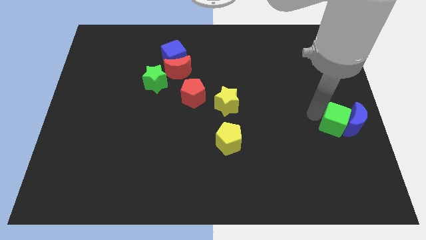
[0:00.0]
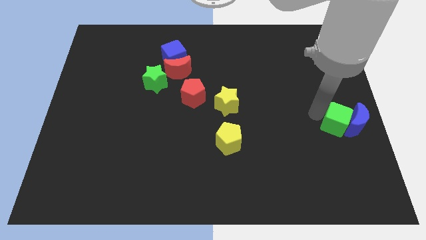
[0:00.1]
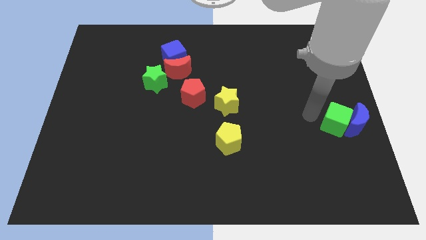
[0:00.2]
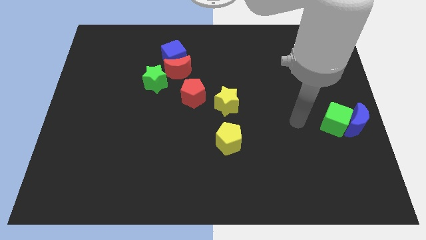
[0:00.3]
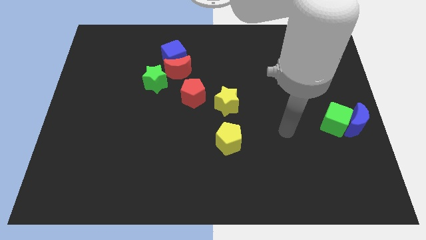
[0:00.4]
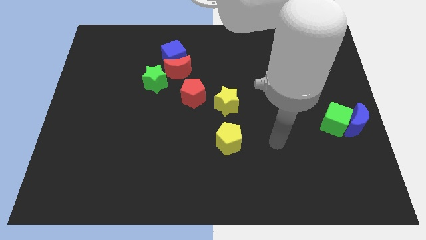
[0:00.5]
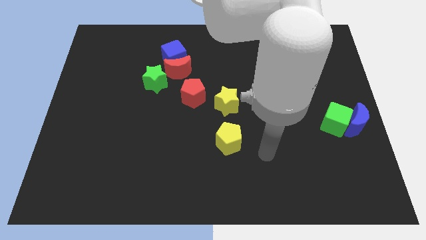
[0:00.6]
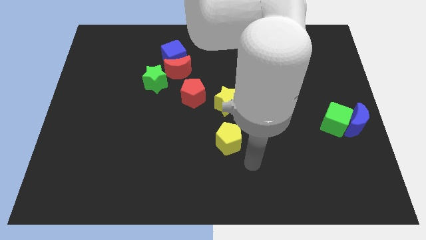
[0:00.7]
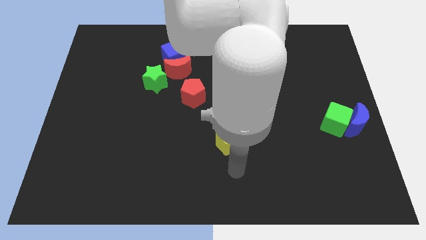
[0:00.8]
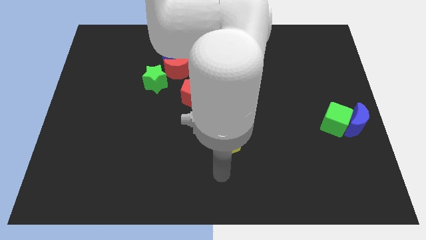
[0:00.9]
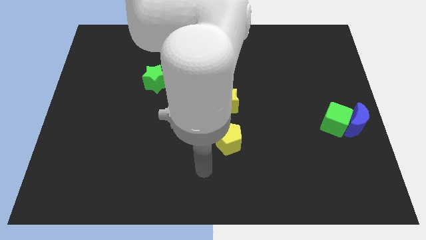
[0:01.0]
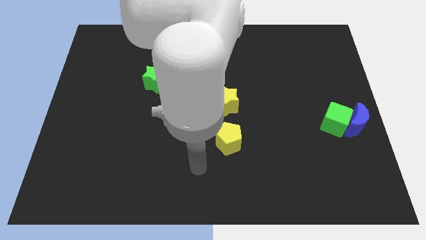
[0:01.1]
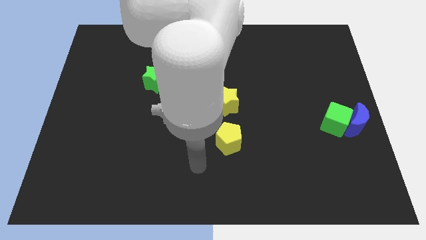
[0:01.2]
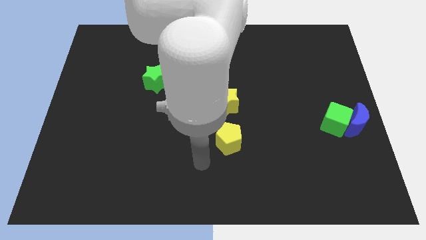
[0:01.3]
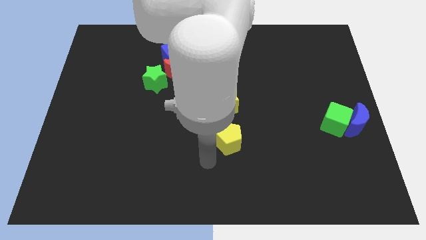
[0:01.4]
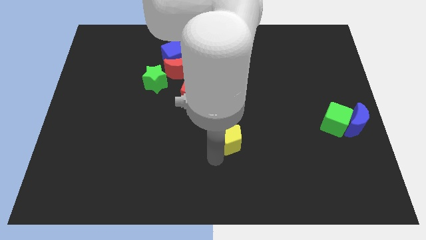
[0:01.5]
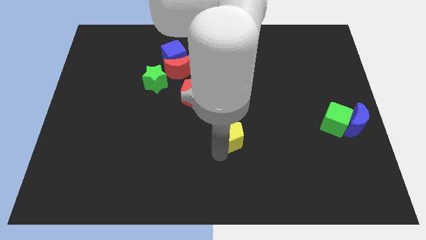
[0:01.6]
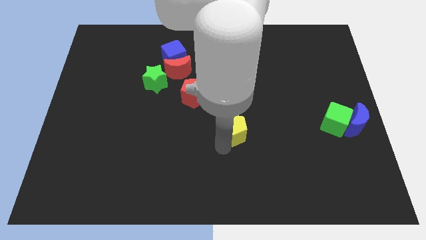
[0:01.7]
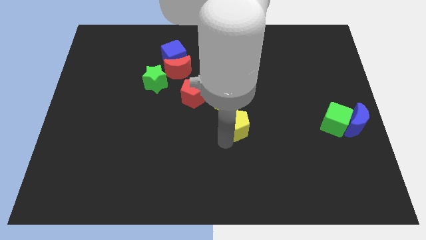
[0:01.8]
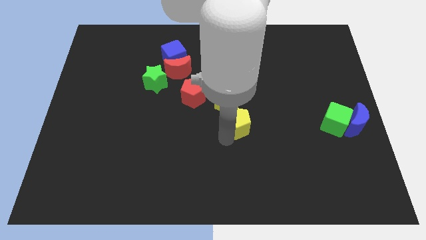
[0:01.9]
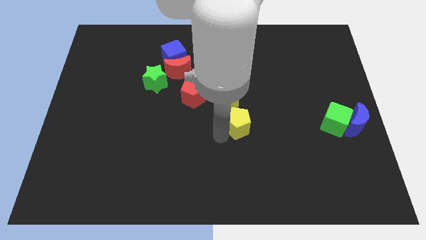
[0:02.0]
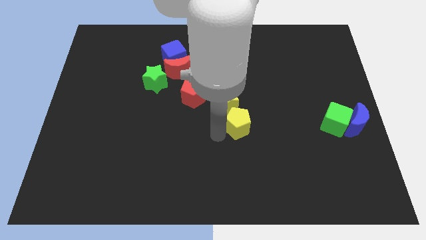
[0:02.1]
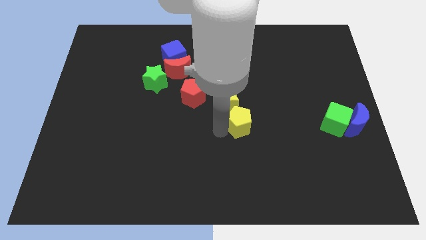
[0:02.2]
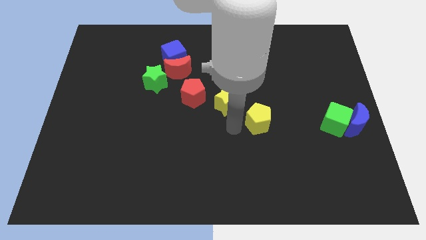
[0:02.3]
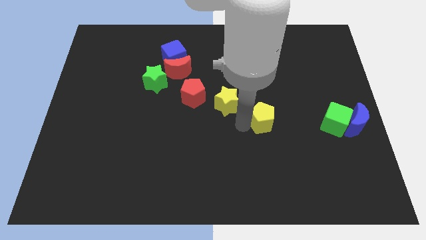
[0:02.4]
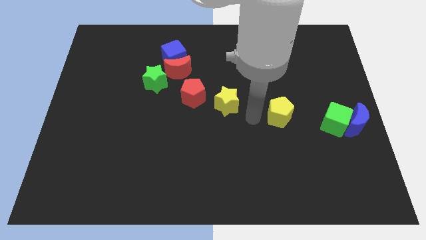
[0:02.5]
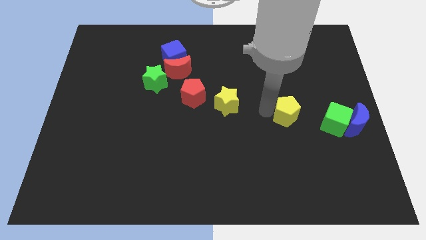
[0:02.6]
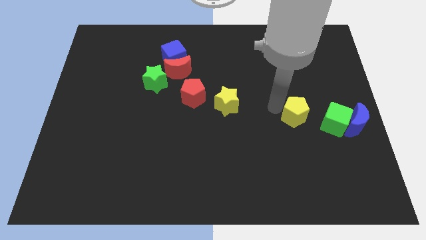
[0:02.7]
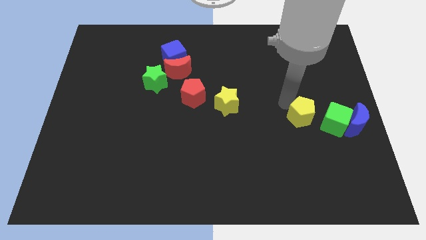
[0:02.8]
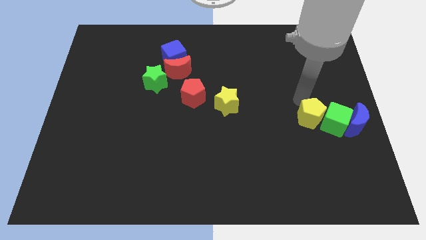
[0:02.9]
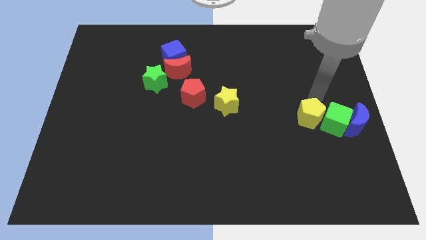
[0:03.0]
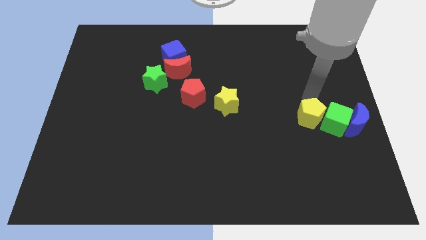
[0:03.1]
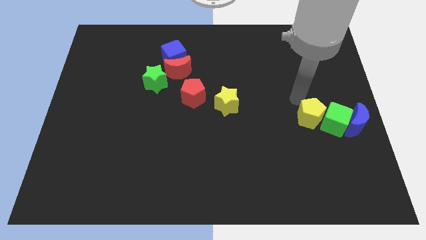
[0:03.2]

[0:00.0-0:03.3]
push yellow pentagon beside green cube

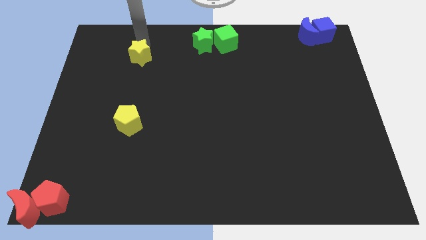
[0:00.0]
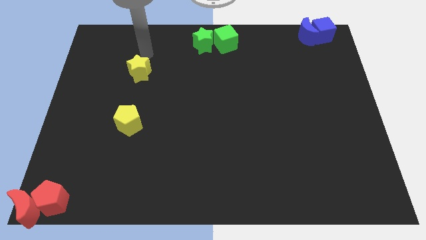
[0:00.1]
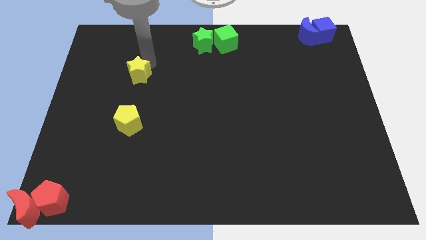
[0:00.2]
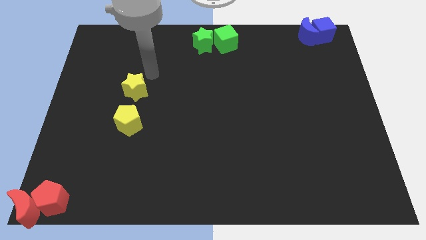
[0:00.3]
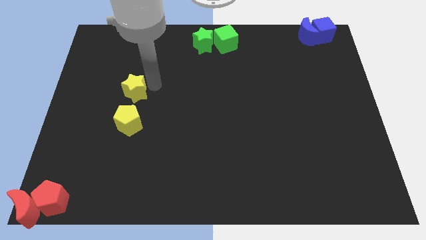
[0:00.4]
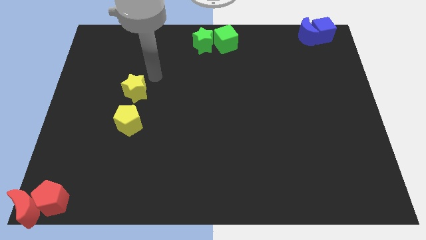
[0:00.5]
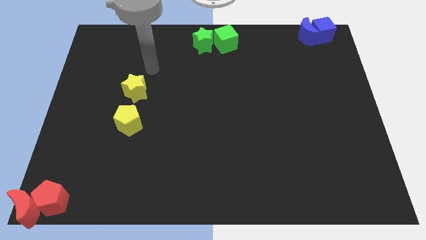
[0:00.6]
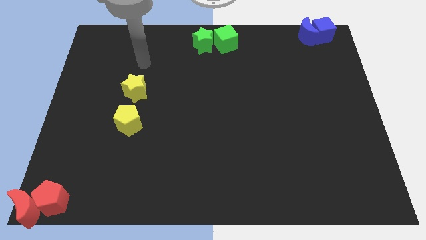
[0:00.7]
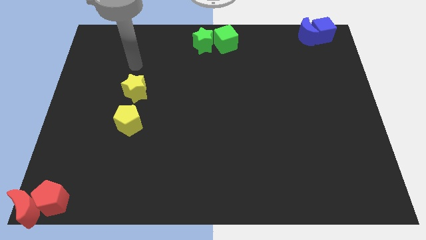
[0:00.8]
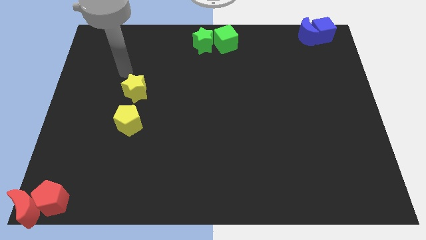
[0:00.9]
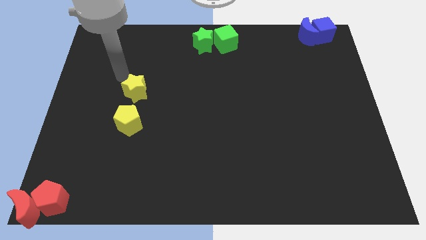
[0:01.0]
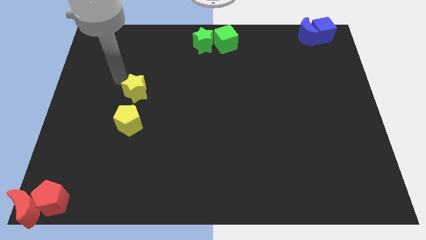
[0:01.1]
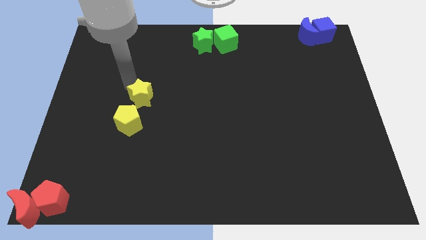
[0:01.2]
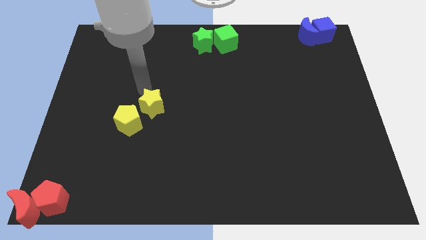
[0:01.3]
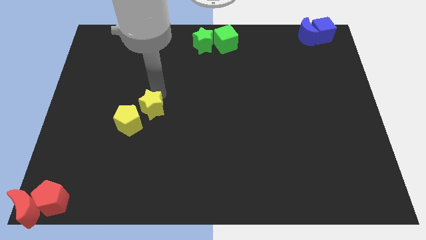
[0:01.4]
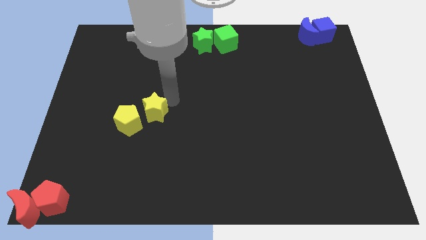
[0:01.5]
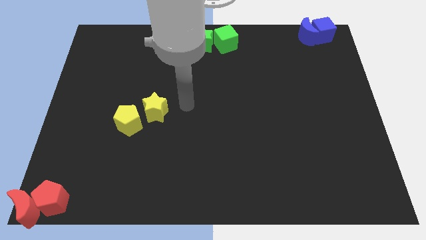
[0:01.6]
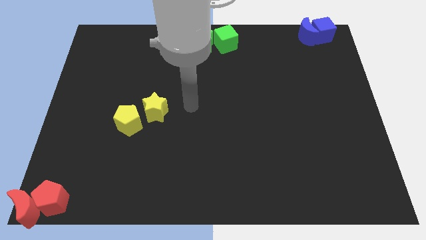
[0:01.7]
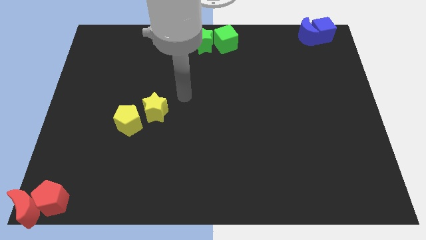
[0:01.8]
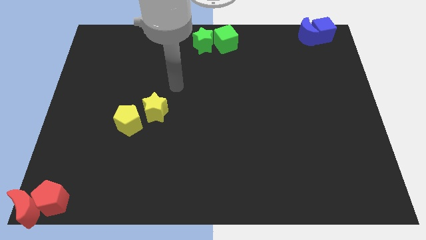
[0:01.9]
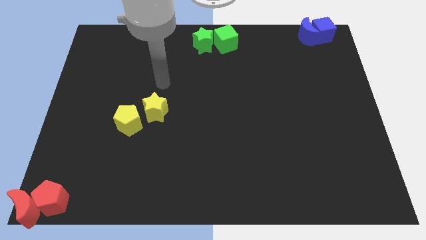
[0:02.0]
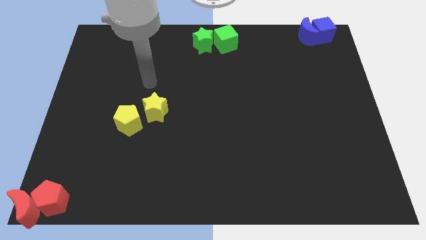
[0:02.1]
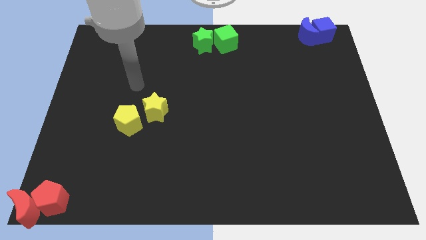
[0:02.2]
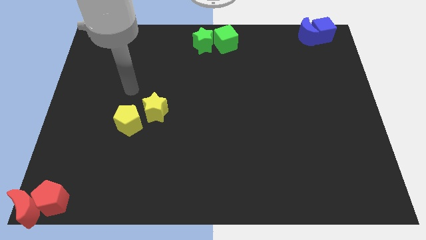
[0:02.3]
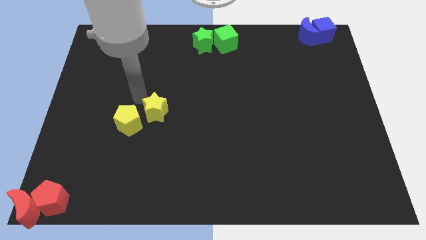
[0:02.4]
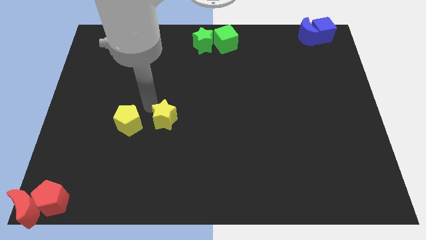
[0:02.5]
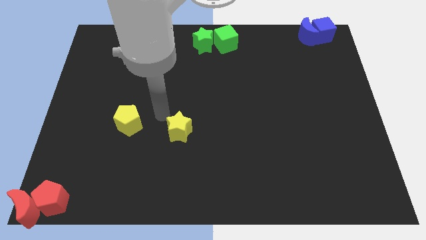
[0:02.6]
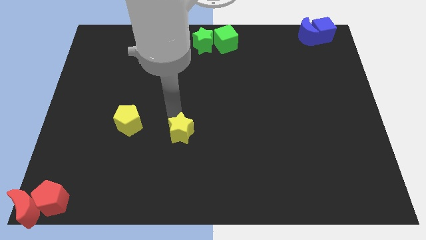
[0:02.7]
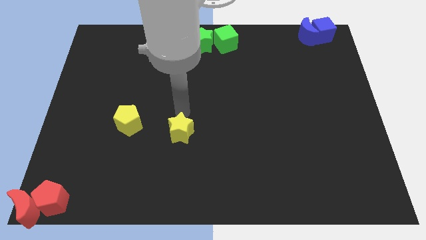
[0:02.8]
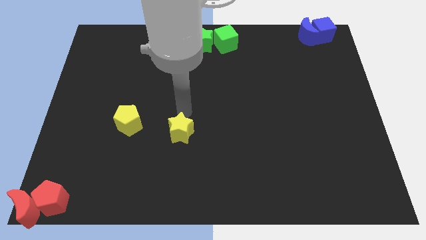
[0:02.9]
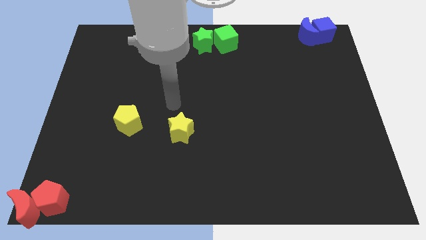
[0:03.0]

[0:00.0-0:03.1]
push the yellow star to the center of the board

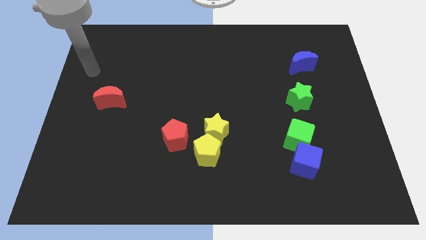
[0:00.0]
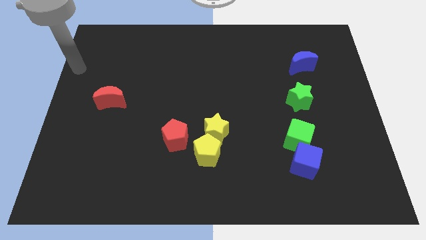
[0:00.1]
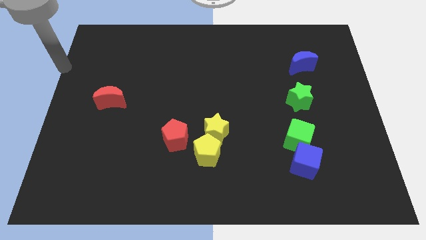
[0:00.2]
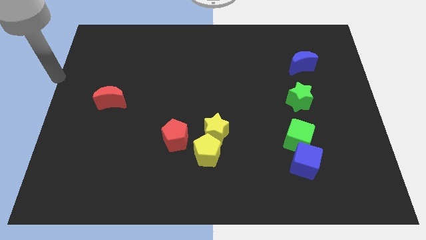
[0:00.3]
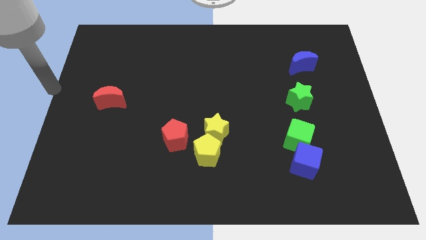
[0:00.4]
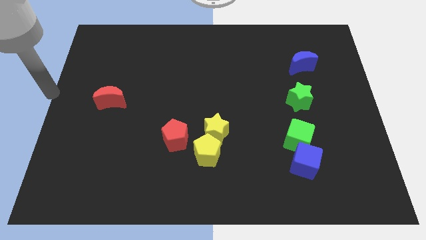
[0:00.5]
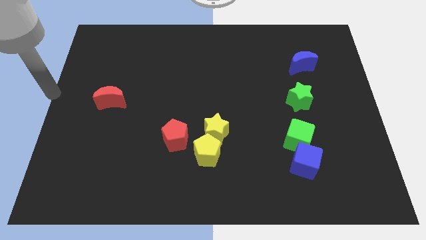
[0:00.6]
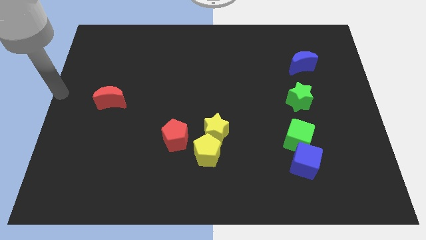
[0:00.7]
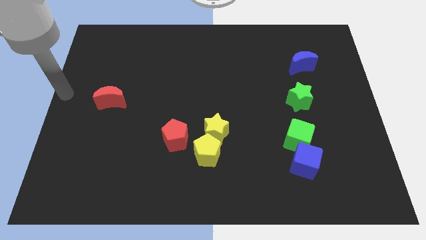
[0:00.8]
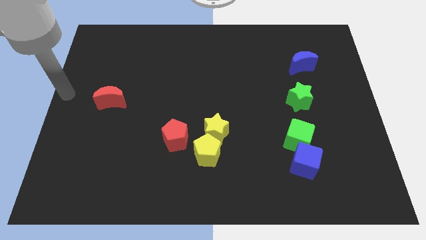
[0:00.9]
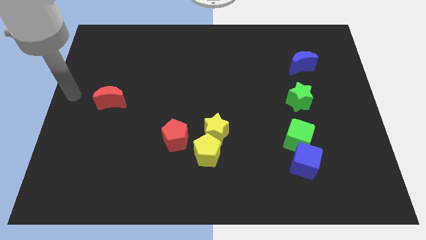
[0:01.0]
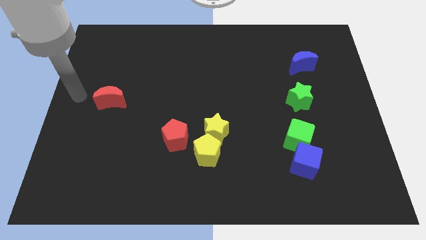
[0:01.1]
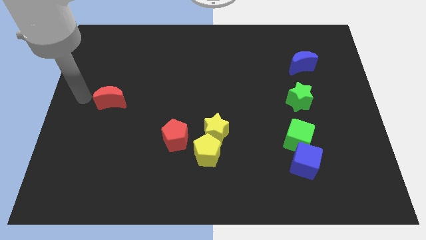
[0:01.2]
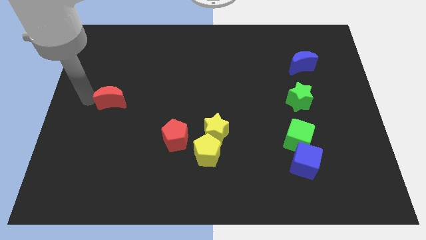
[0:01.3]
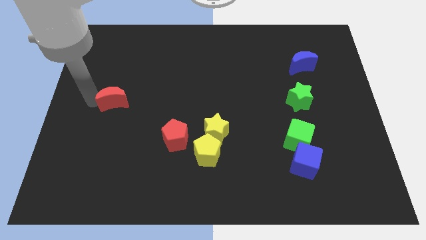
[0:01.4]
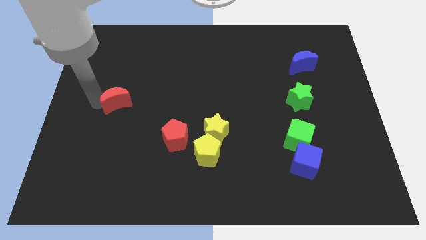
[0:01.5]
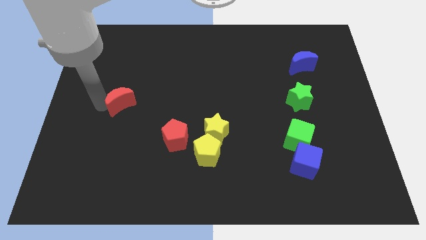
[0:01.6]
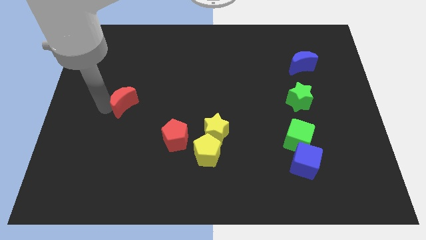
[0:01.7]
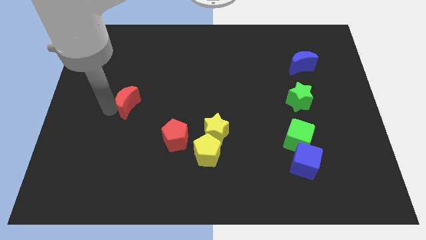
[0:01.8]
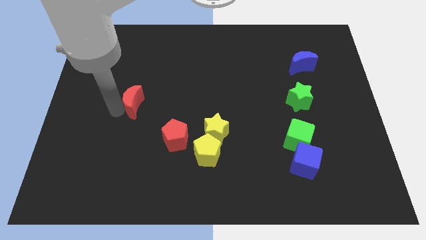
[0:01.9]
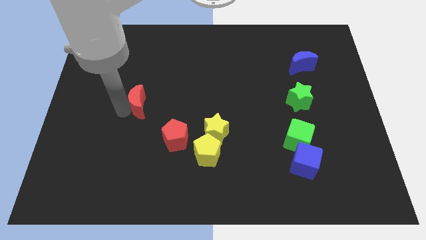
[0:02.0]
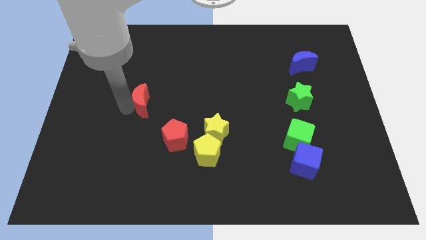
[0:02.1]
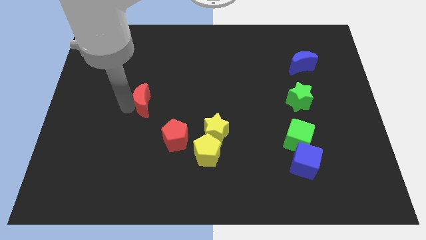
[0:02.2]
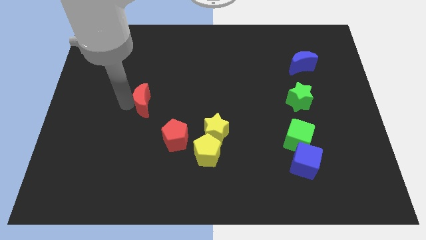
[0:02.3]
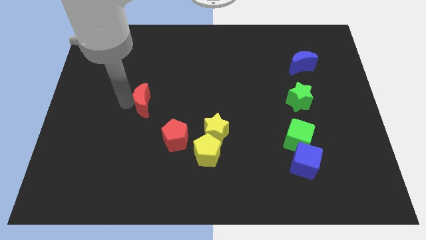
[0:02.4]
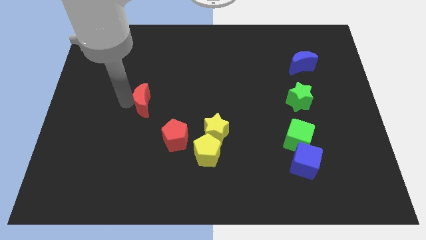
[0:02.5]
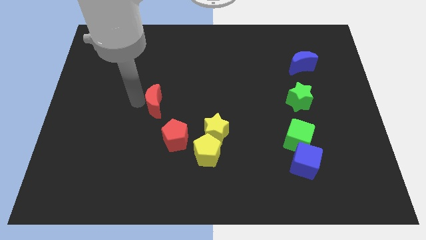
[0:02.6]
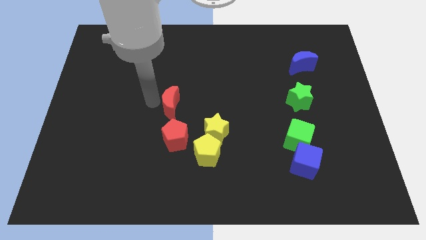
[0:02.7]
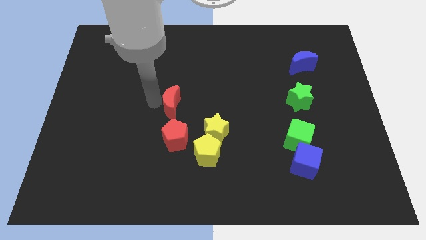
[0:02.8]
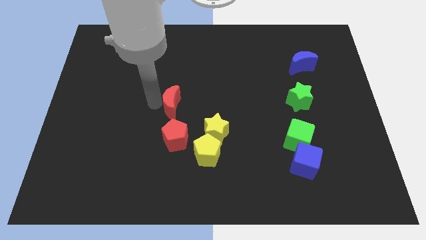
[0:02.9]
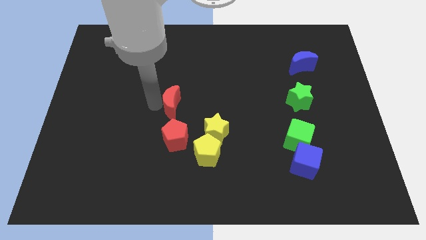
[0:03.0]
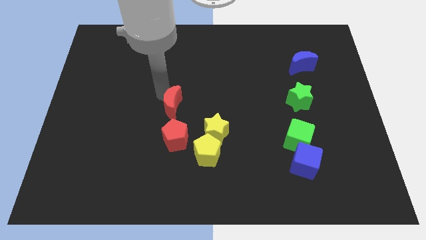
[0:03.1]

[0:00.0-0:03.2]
drag the red moon to the top of the red pentagon
